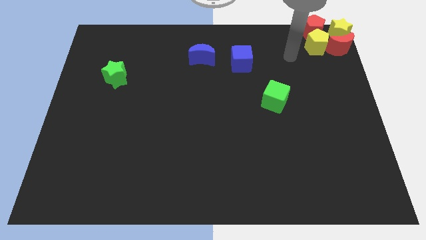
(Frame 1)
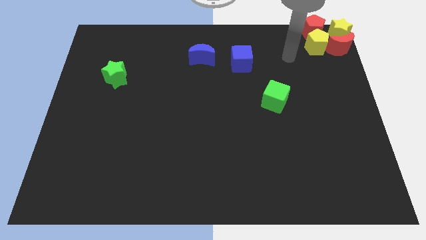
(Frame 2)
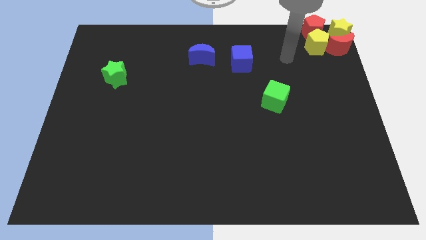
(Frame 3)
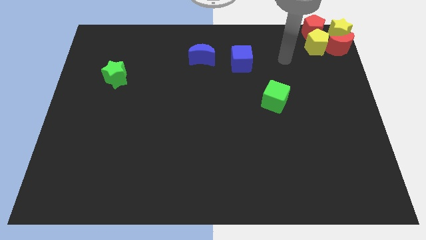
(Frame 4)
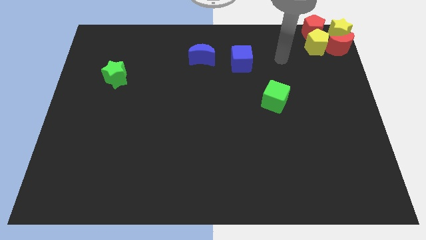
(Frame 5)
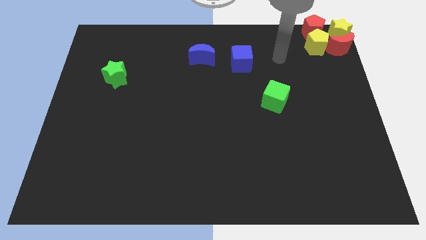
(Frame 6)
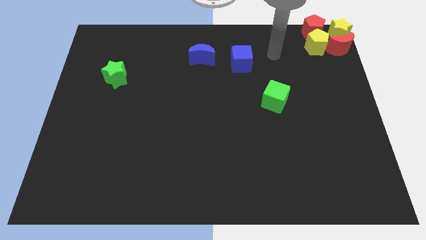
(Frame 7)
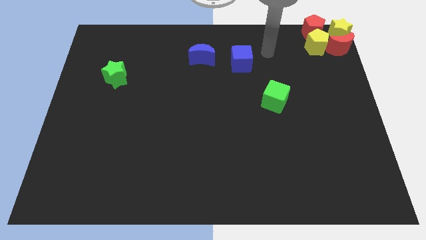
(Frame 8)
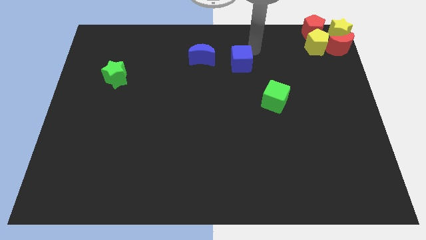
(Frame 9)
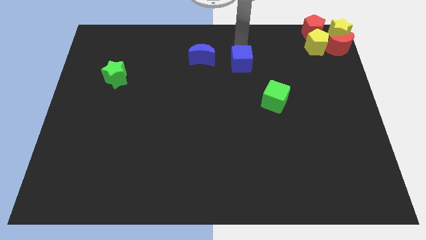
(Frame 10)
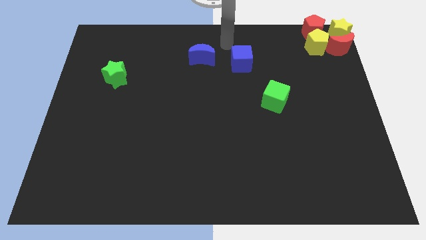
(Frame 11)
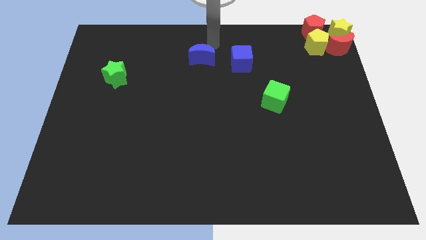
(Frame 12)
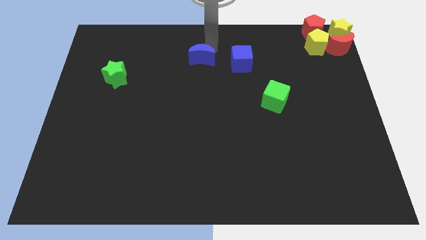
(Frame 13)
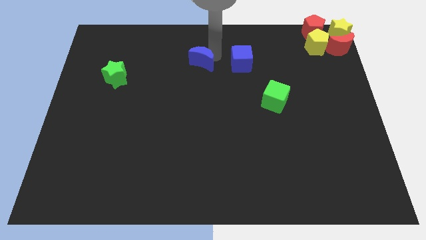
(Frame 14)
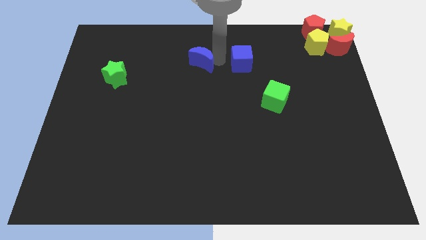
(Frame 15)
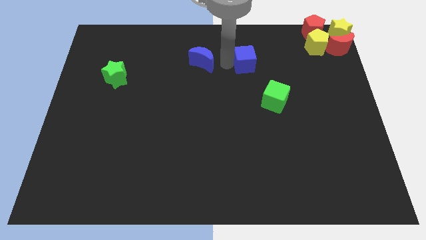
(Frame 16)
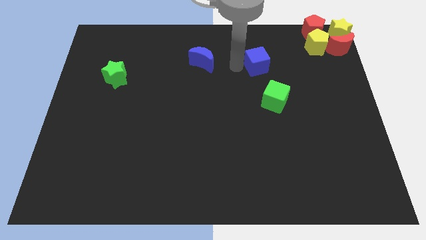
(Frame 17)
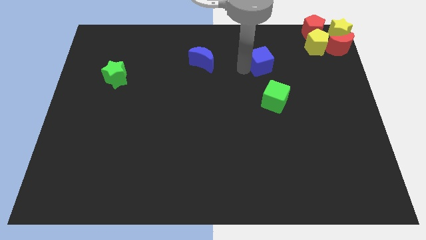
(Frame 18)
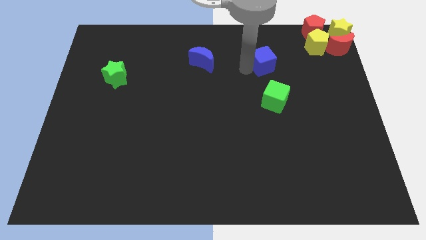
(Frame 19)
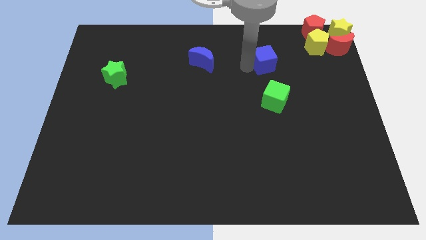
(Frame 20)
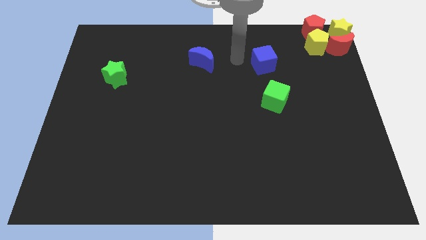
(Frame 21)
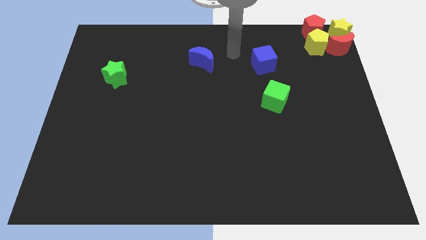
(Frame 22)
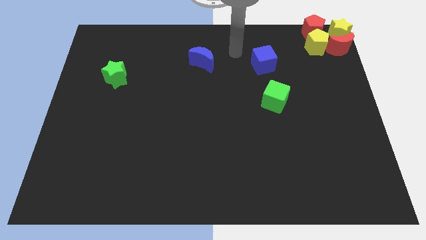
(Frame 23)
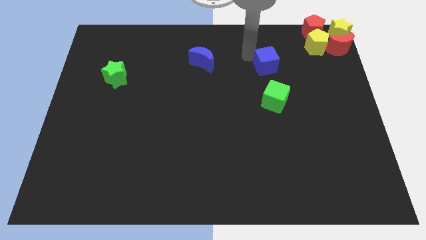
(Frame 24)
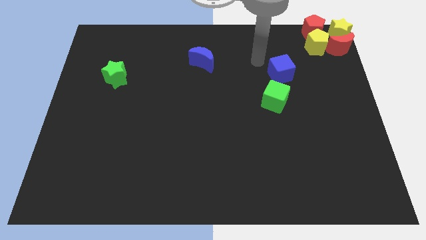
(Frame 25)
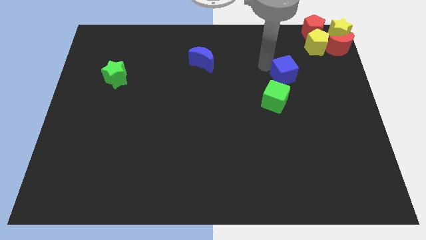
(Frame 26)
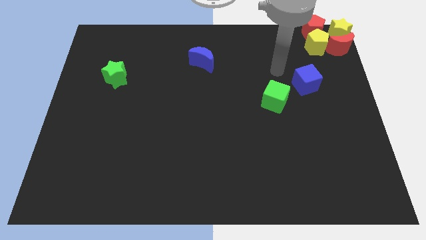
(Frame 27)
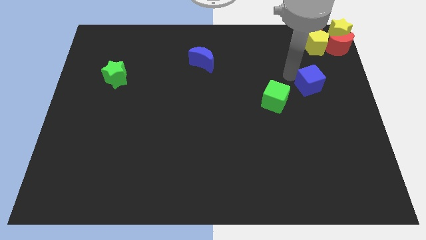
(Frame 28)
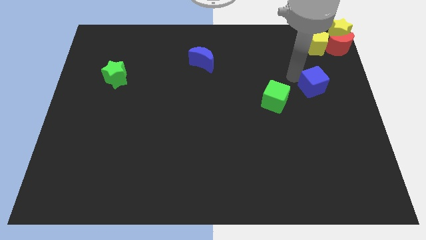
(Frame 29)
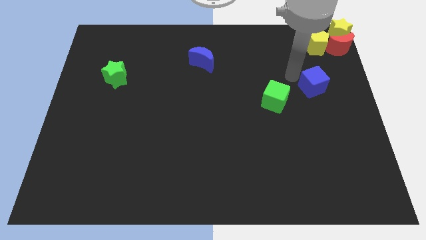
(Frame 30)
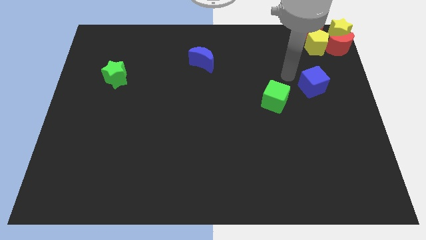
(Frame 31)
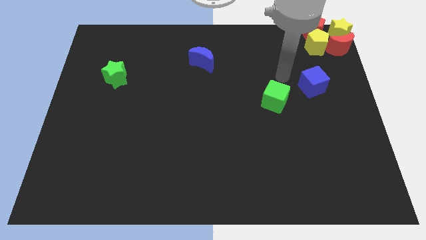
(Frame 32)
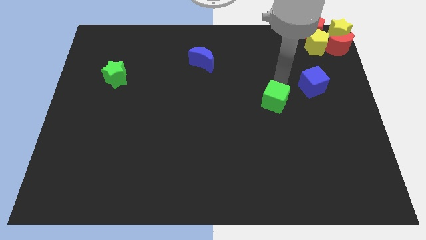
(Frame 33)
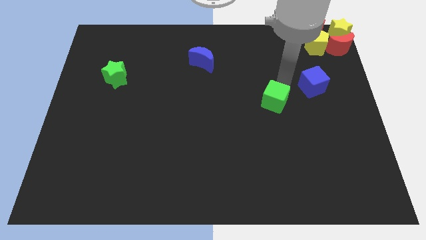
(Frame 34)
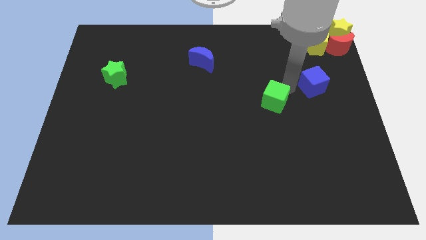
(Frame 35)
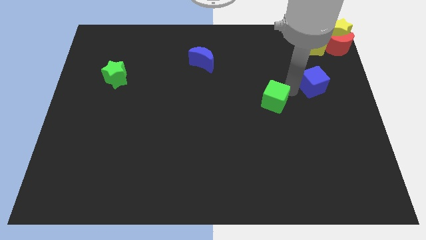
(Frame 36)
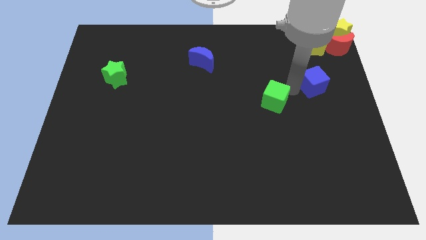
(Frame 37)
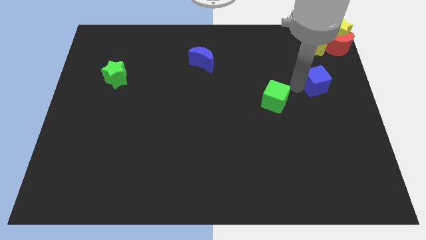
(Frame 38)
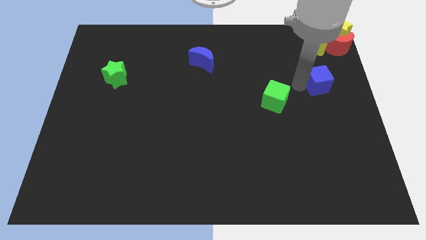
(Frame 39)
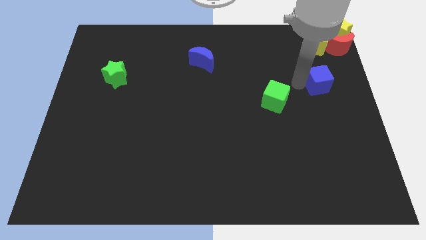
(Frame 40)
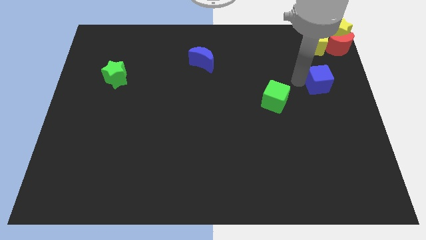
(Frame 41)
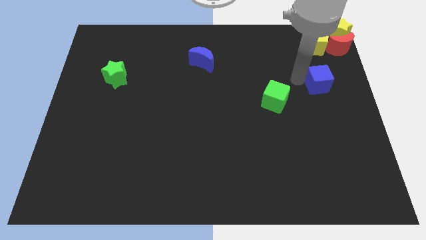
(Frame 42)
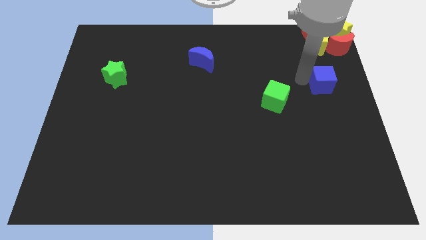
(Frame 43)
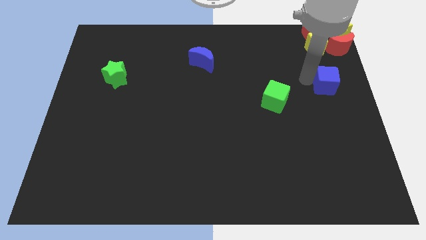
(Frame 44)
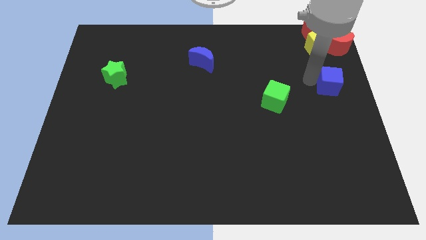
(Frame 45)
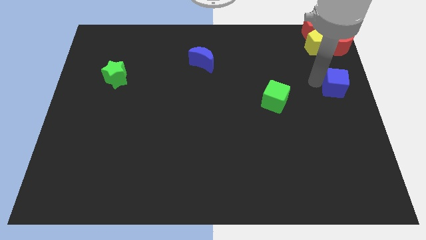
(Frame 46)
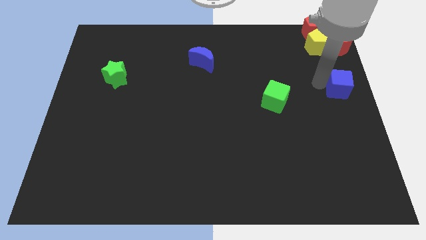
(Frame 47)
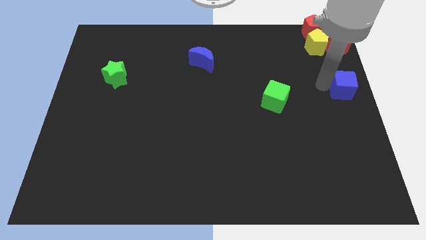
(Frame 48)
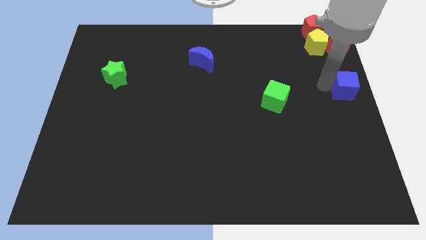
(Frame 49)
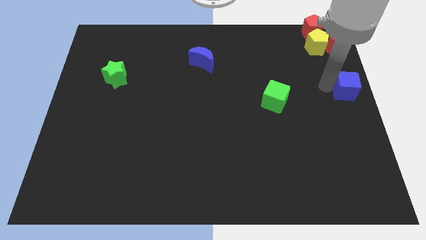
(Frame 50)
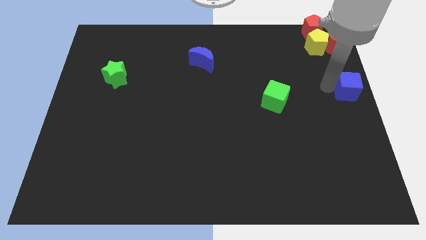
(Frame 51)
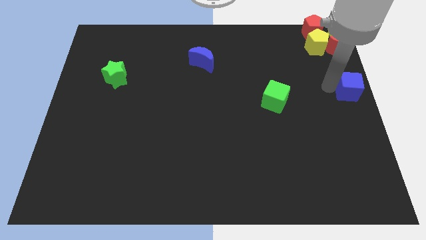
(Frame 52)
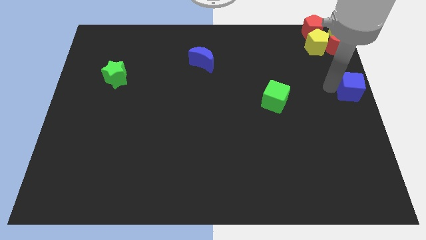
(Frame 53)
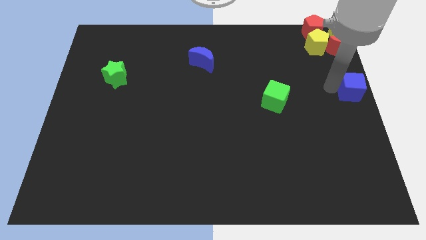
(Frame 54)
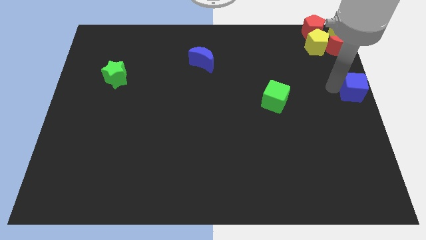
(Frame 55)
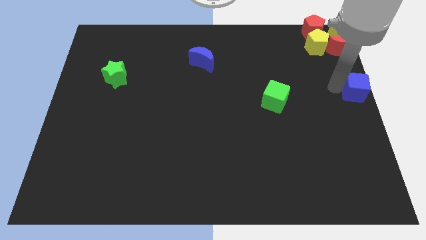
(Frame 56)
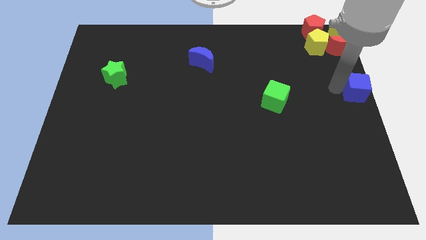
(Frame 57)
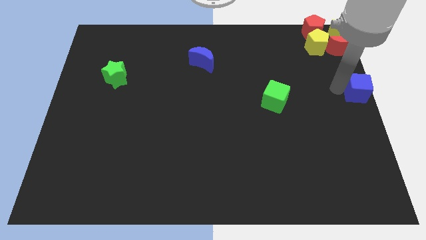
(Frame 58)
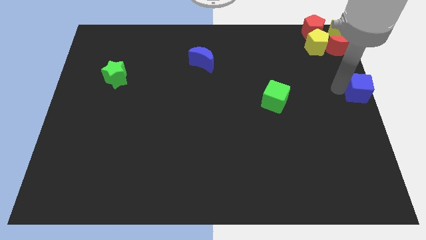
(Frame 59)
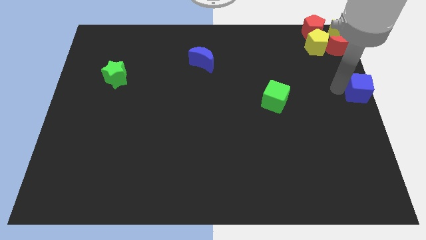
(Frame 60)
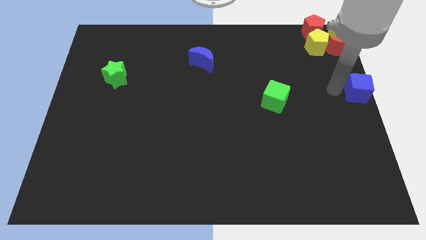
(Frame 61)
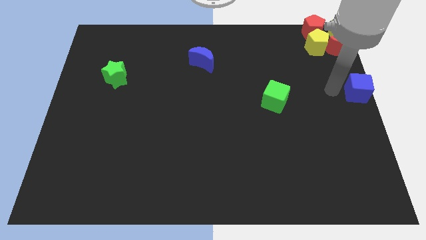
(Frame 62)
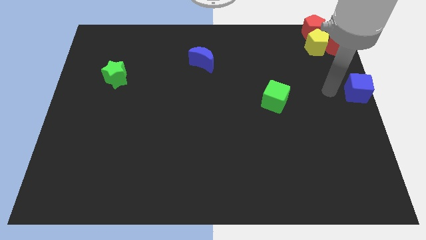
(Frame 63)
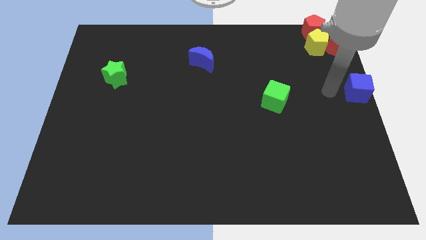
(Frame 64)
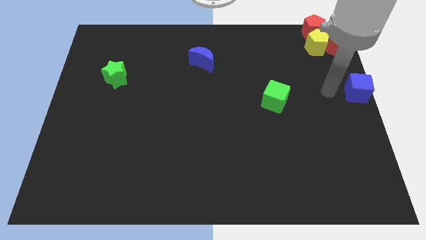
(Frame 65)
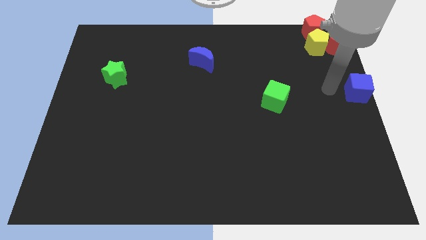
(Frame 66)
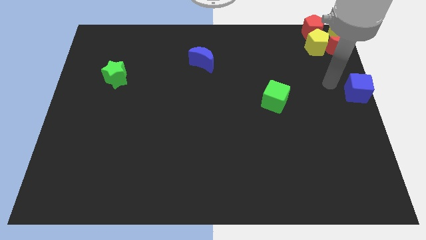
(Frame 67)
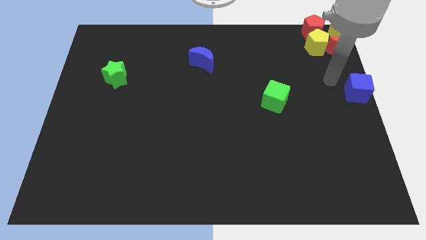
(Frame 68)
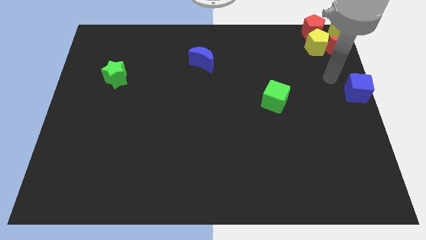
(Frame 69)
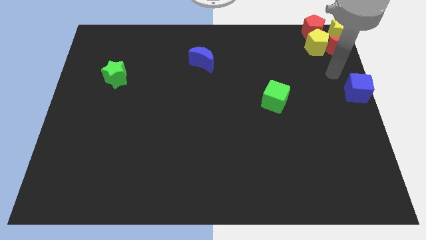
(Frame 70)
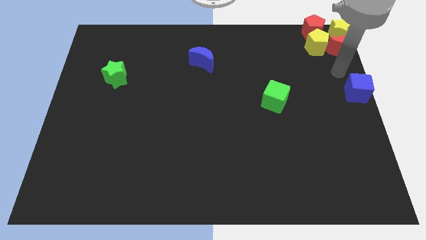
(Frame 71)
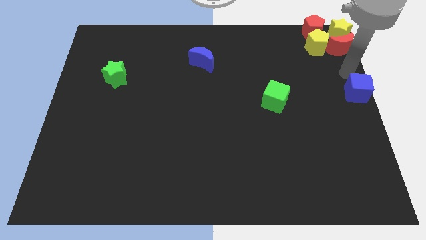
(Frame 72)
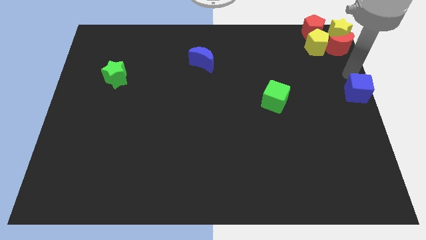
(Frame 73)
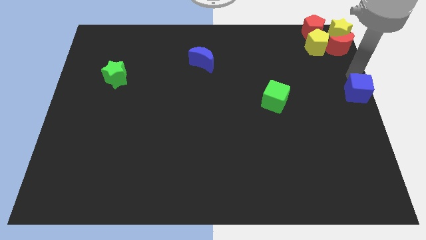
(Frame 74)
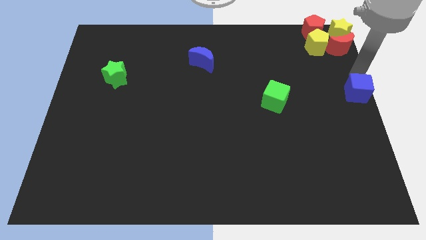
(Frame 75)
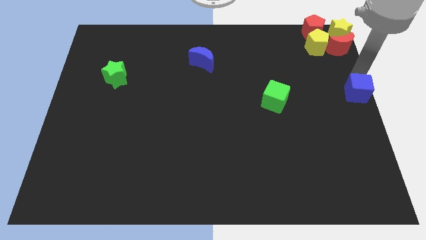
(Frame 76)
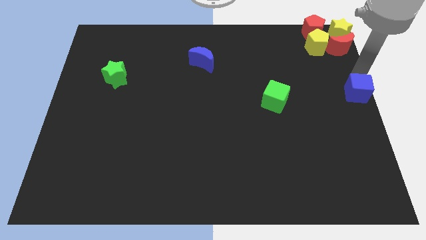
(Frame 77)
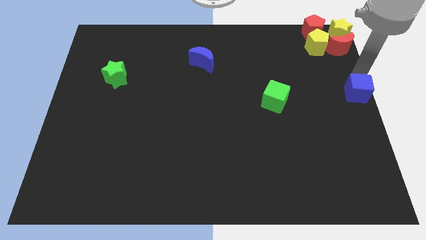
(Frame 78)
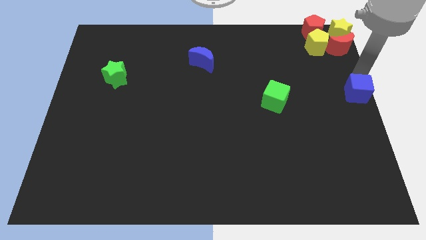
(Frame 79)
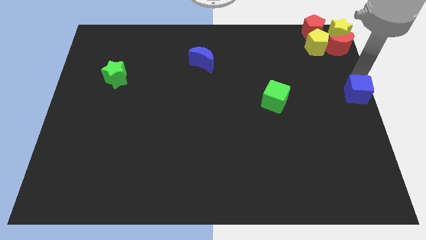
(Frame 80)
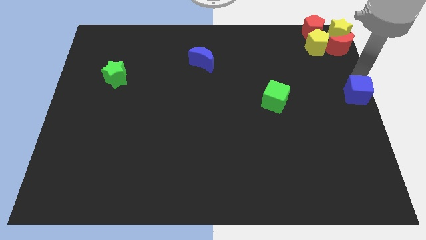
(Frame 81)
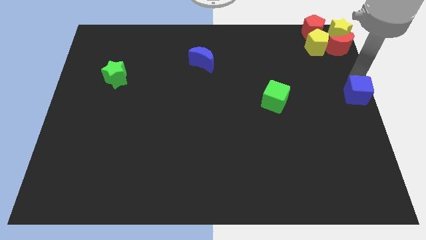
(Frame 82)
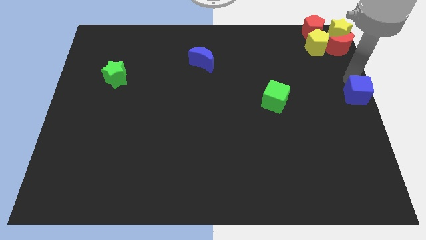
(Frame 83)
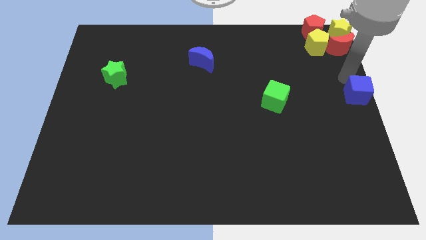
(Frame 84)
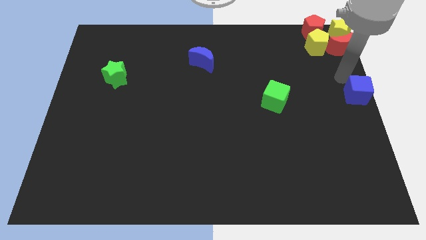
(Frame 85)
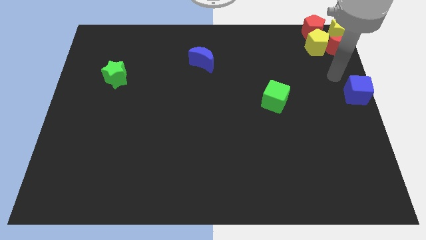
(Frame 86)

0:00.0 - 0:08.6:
move the blue cube to the center right of the board

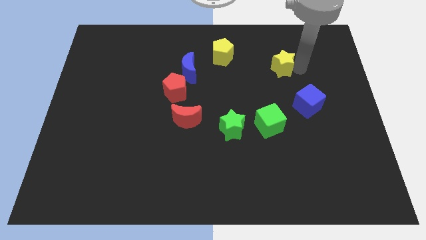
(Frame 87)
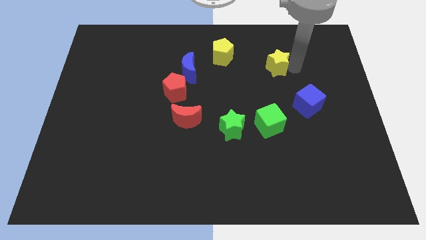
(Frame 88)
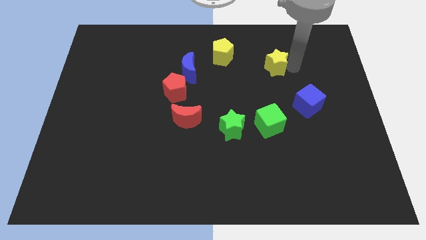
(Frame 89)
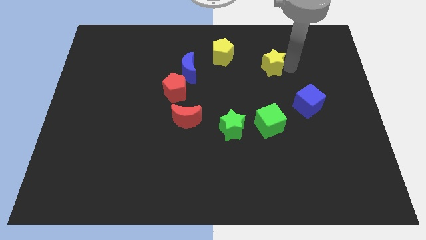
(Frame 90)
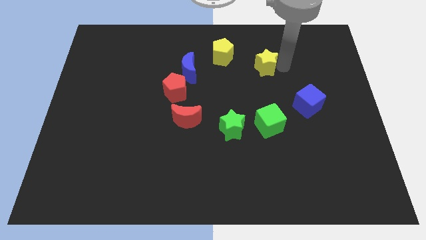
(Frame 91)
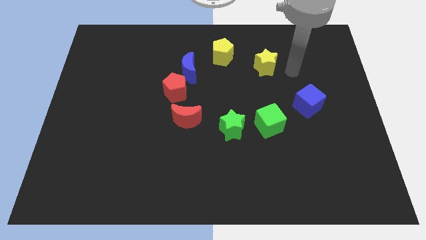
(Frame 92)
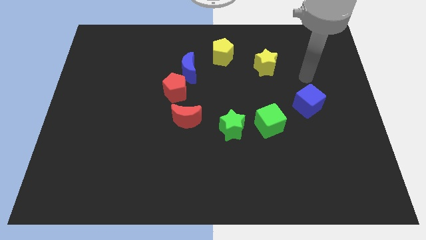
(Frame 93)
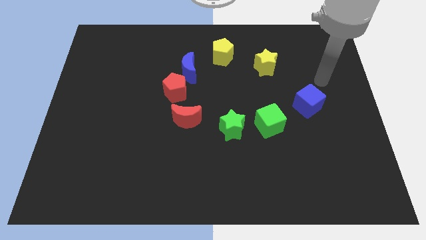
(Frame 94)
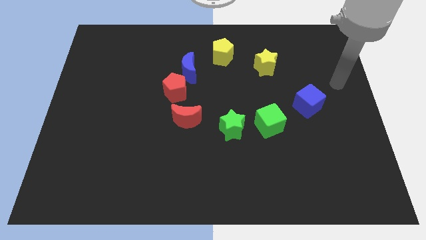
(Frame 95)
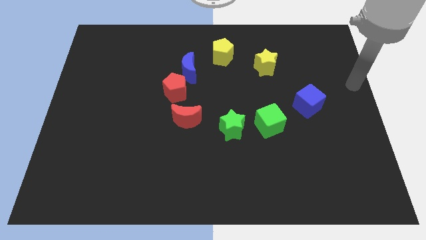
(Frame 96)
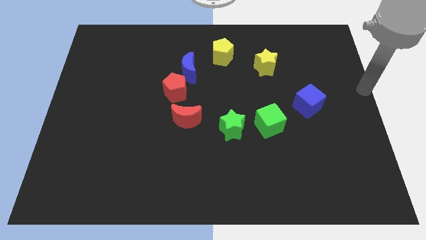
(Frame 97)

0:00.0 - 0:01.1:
push the yellow star slightly left side
